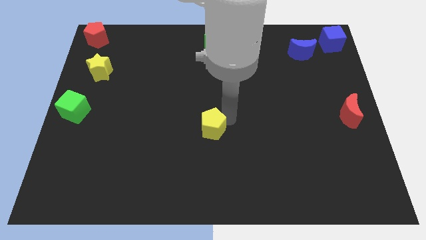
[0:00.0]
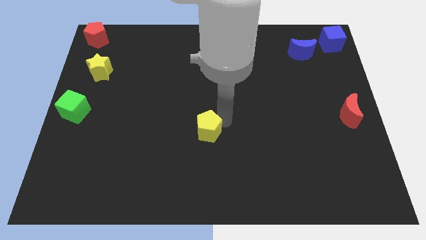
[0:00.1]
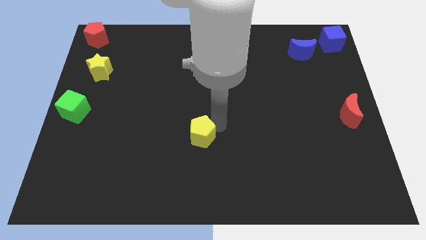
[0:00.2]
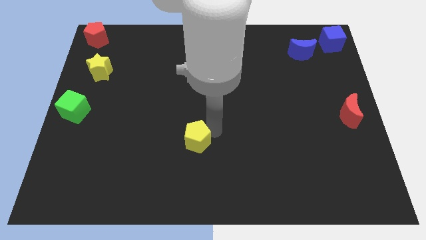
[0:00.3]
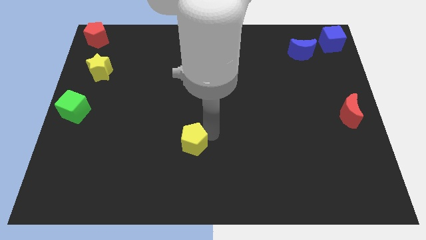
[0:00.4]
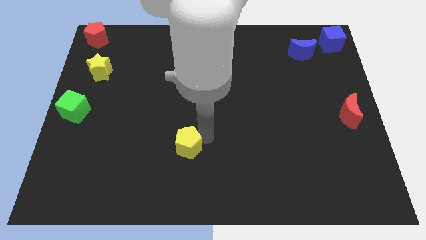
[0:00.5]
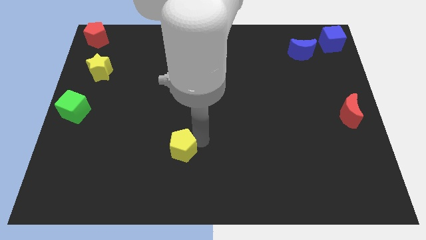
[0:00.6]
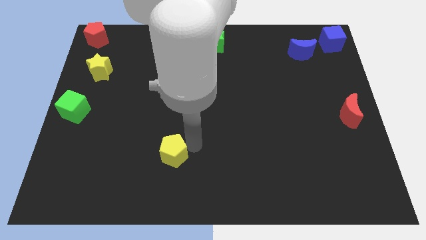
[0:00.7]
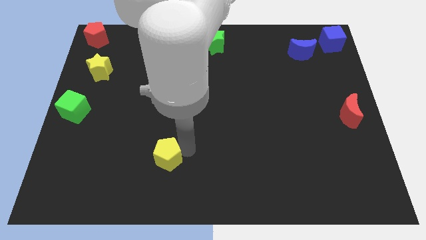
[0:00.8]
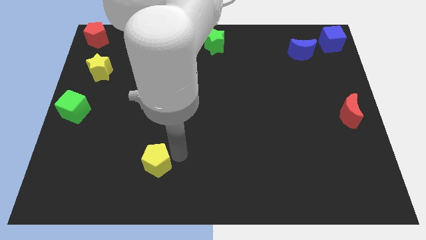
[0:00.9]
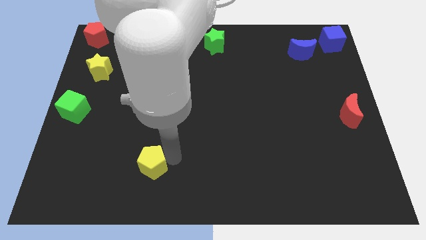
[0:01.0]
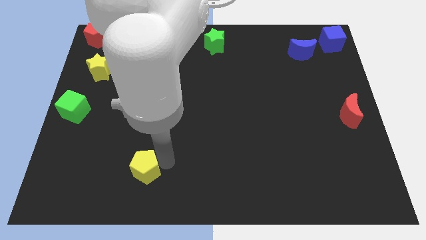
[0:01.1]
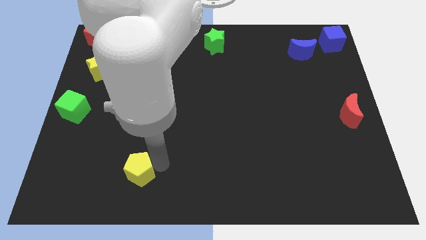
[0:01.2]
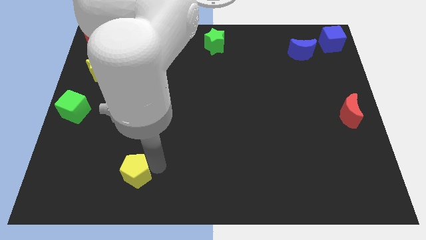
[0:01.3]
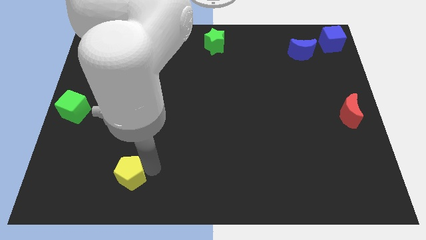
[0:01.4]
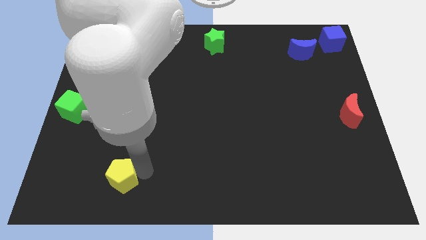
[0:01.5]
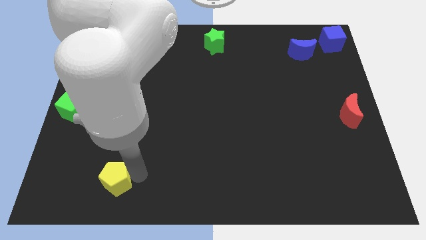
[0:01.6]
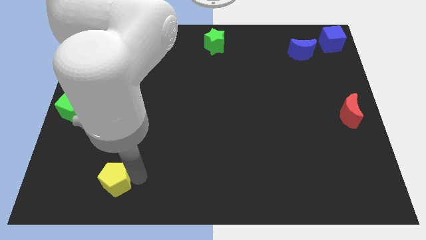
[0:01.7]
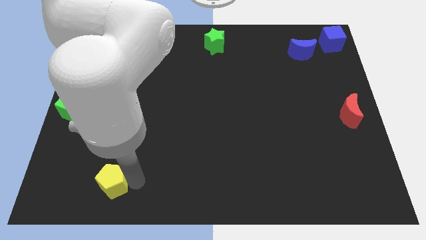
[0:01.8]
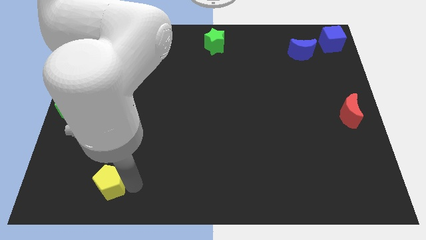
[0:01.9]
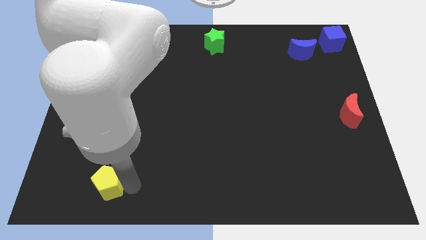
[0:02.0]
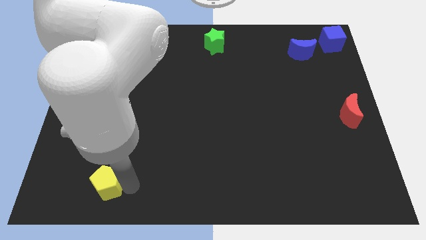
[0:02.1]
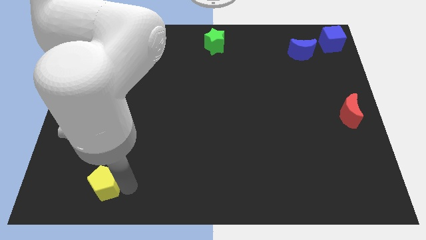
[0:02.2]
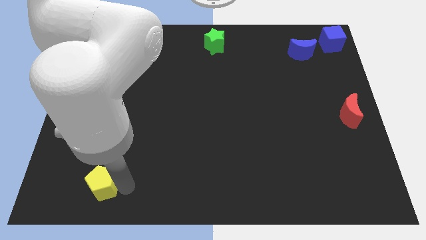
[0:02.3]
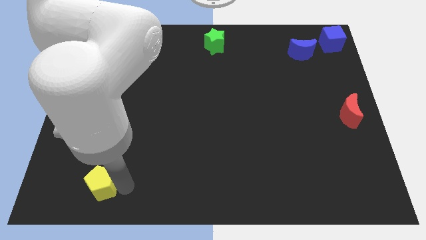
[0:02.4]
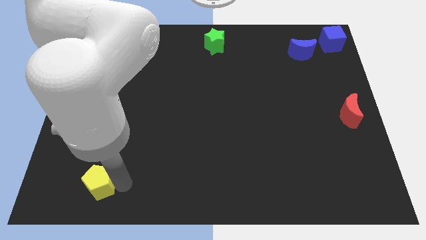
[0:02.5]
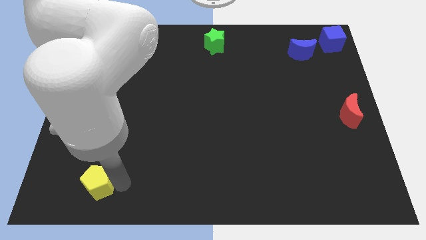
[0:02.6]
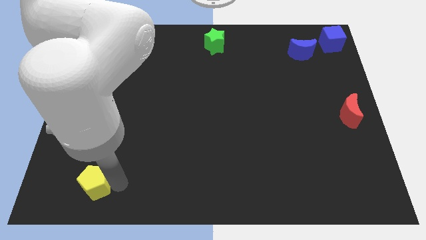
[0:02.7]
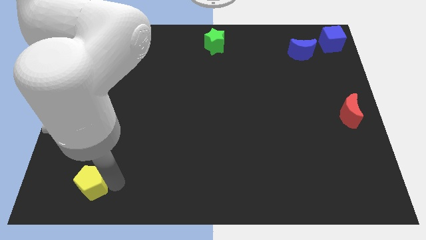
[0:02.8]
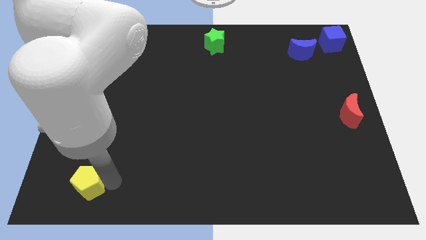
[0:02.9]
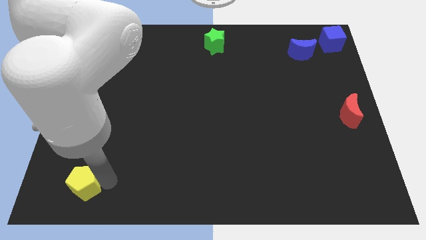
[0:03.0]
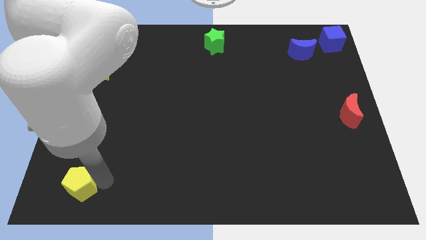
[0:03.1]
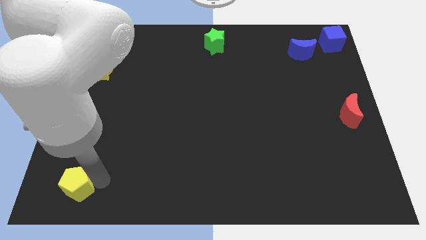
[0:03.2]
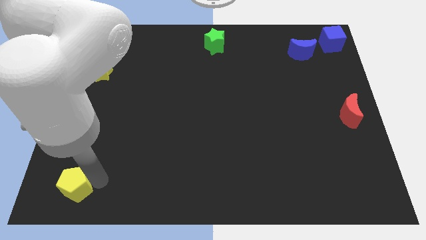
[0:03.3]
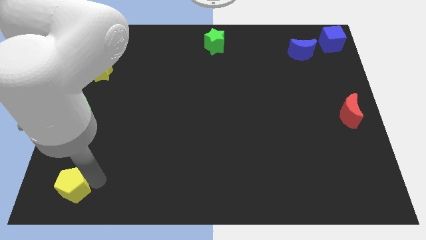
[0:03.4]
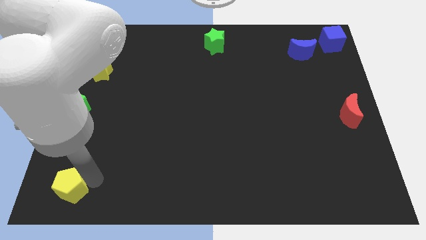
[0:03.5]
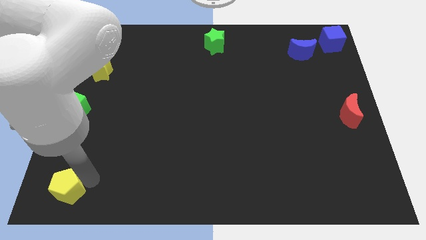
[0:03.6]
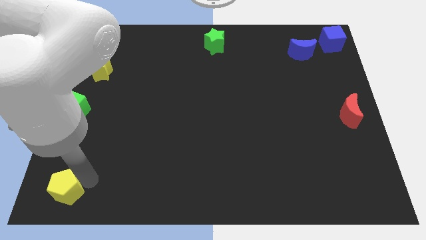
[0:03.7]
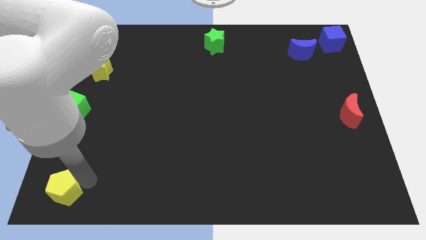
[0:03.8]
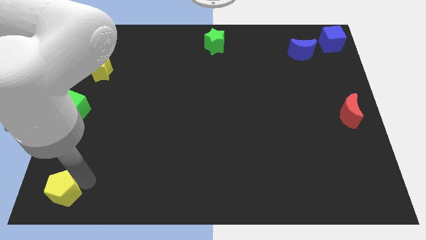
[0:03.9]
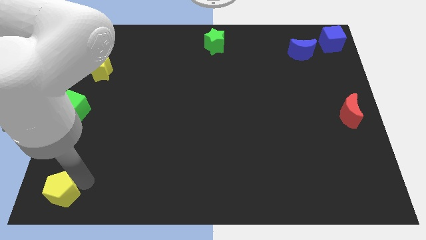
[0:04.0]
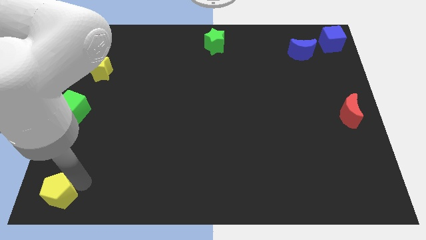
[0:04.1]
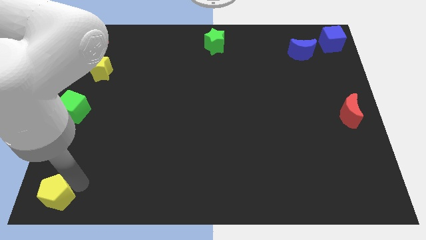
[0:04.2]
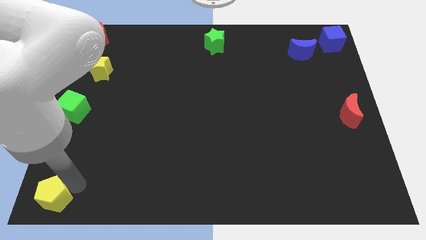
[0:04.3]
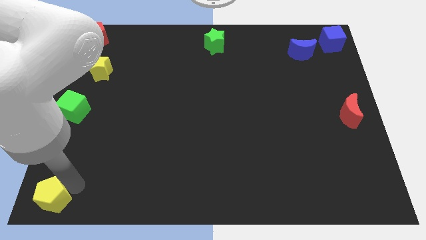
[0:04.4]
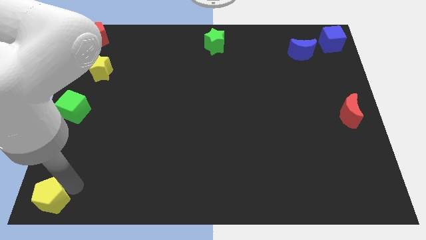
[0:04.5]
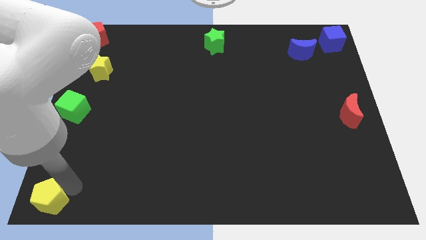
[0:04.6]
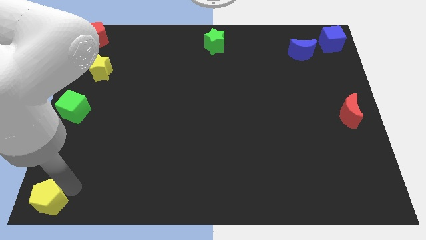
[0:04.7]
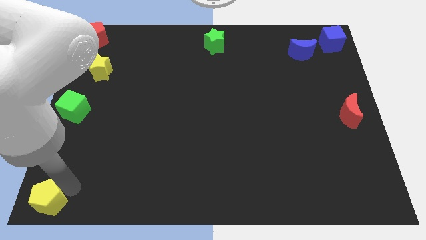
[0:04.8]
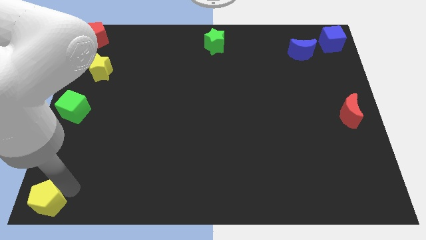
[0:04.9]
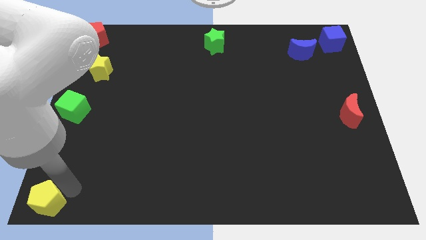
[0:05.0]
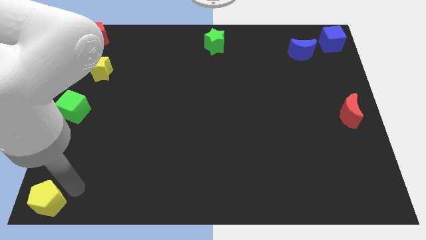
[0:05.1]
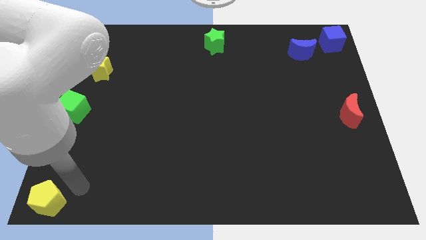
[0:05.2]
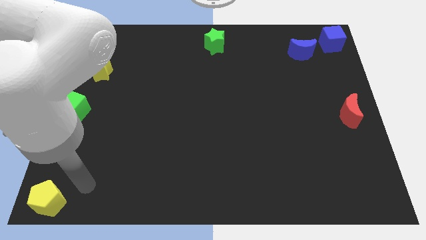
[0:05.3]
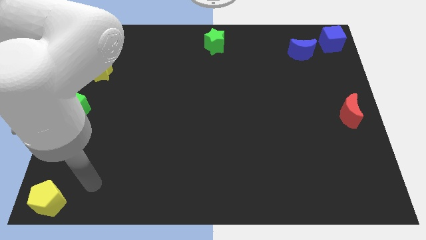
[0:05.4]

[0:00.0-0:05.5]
place the yellow pentagon at the bottom left corner of the board

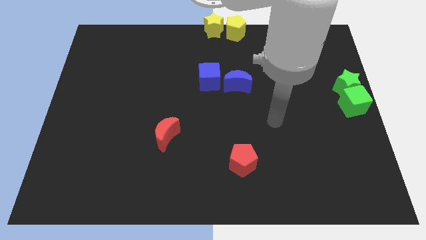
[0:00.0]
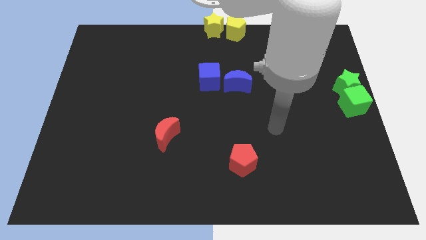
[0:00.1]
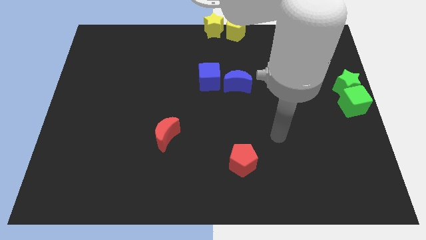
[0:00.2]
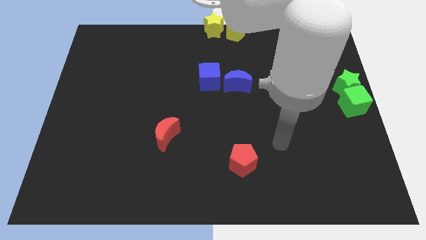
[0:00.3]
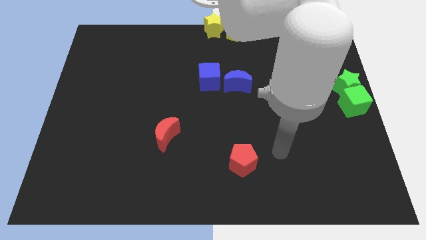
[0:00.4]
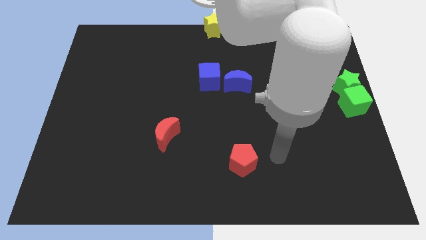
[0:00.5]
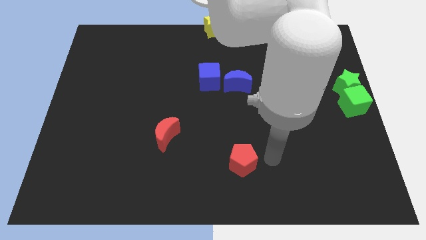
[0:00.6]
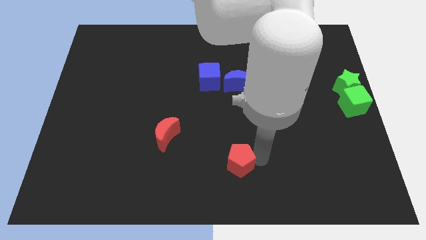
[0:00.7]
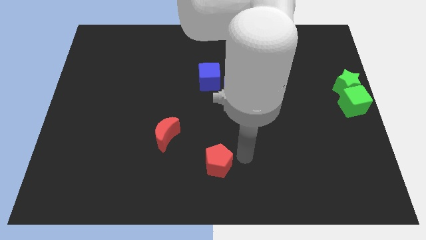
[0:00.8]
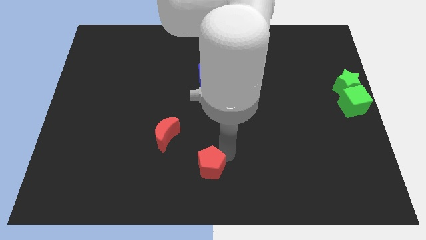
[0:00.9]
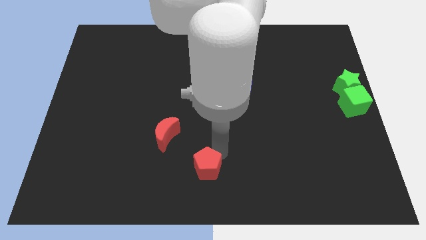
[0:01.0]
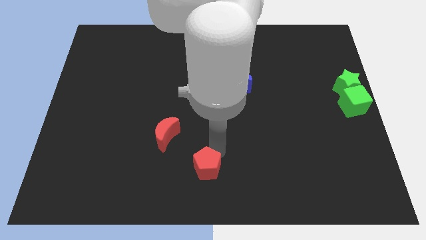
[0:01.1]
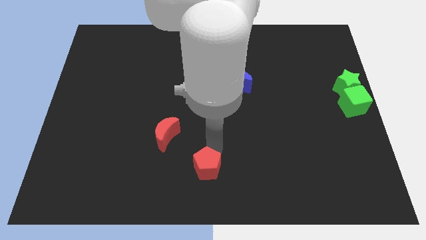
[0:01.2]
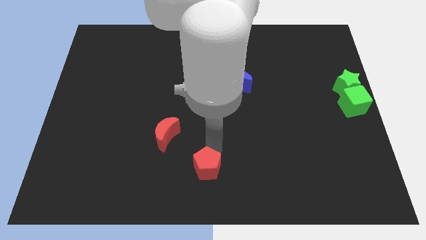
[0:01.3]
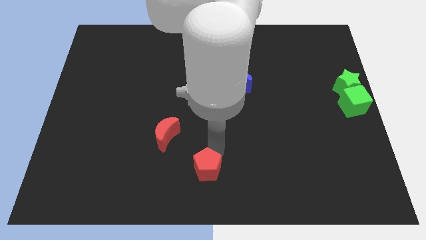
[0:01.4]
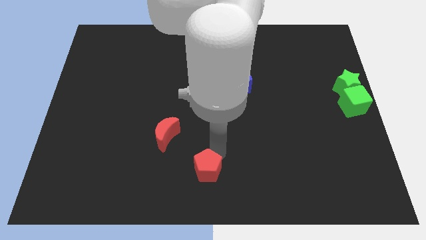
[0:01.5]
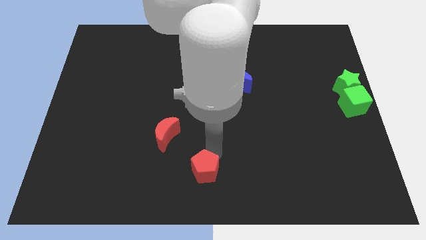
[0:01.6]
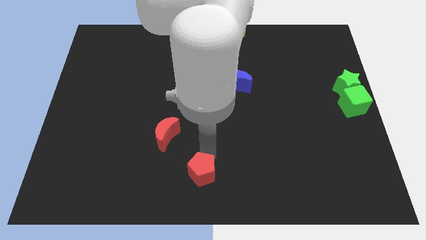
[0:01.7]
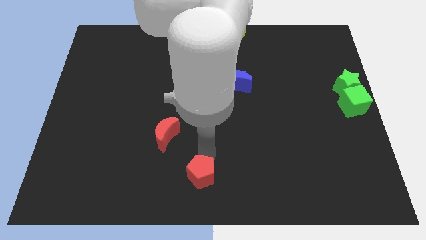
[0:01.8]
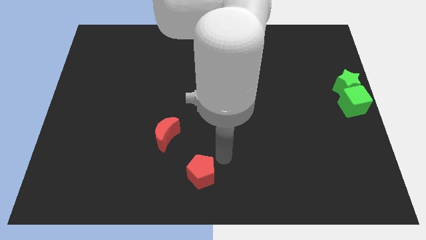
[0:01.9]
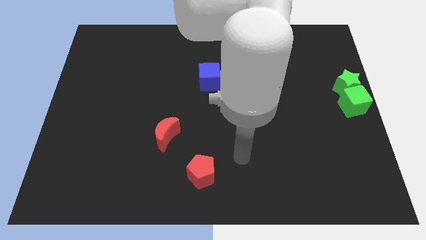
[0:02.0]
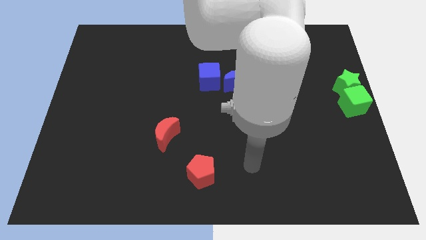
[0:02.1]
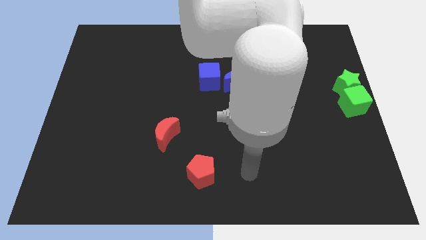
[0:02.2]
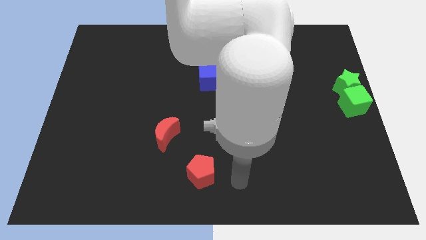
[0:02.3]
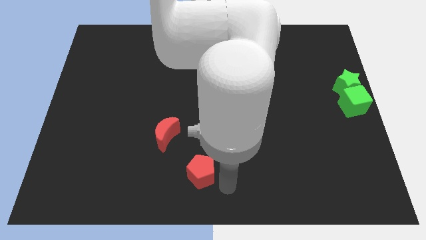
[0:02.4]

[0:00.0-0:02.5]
push the red pentagon diagonal to the red crescent

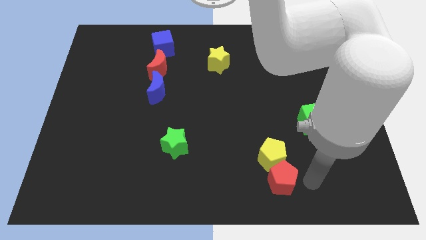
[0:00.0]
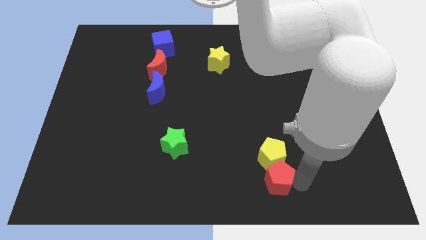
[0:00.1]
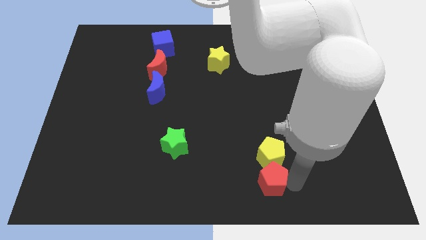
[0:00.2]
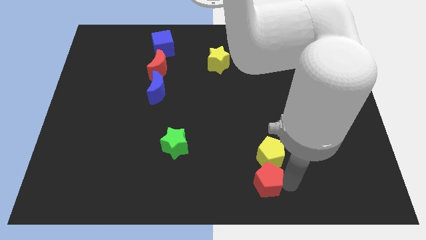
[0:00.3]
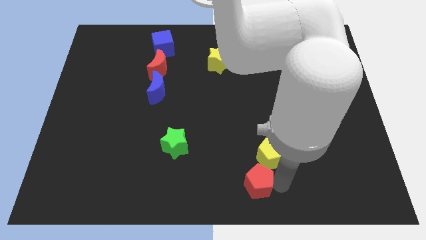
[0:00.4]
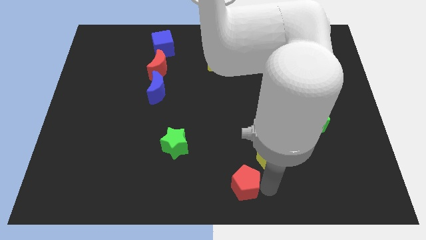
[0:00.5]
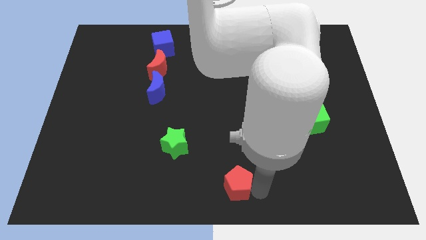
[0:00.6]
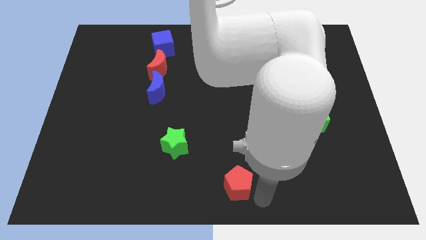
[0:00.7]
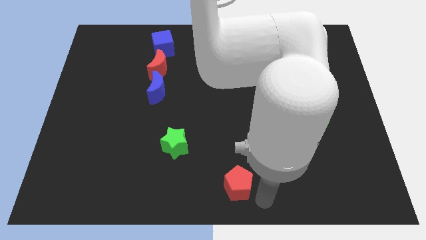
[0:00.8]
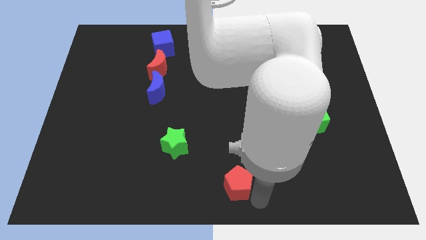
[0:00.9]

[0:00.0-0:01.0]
separate the red pentagon from the yellow pentagon
